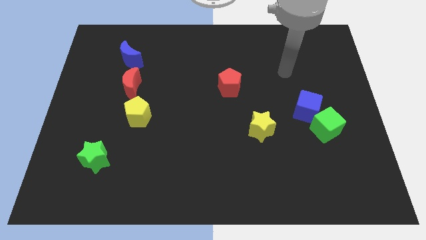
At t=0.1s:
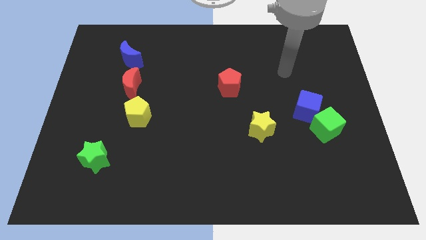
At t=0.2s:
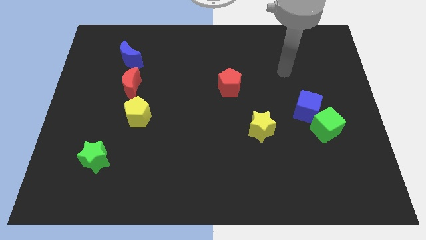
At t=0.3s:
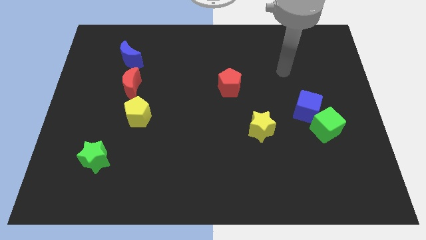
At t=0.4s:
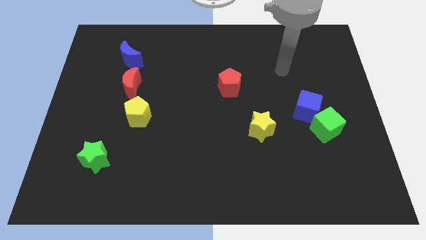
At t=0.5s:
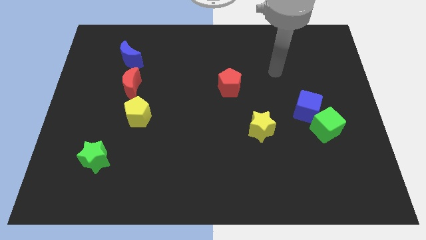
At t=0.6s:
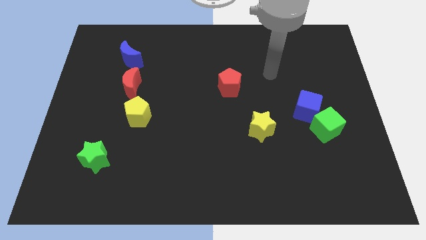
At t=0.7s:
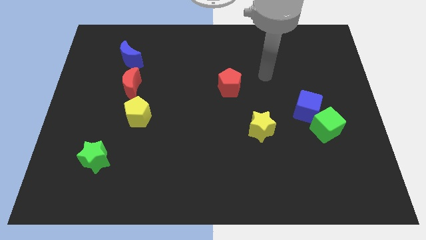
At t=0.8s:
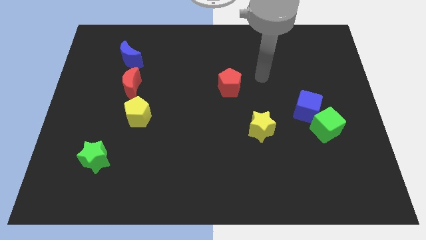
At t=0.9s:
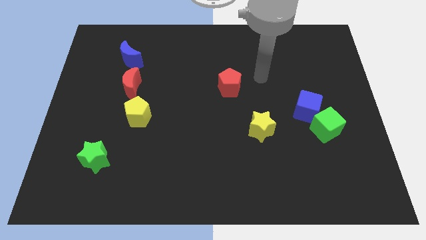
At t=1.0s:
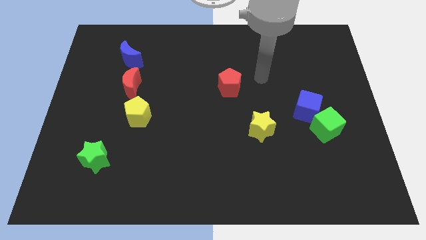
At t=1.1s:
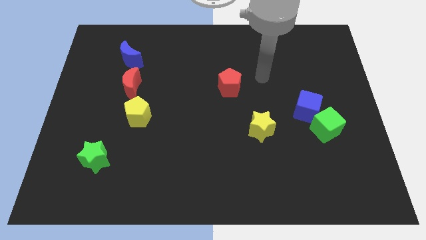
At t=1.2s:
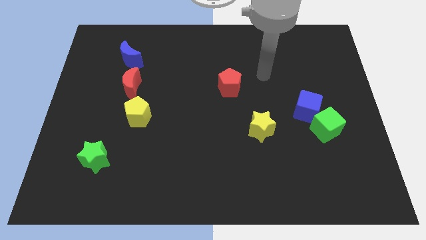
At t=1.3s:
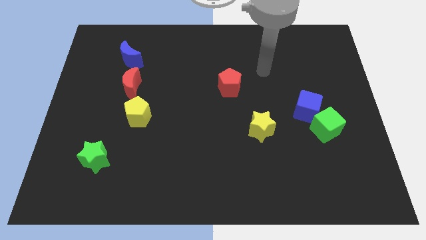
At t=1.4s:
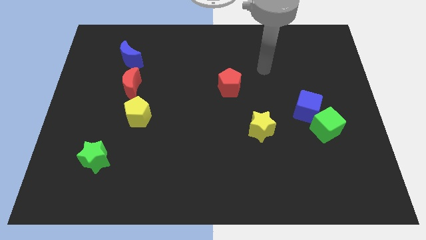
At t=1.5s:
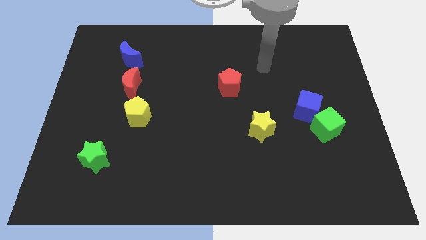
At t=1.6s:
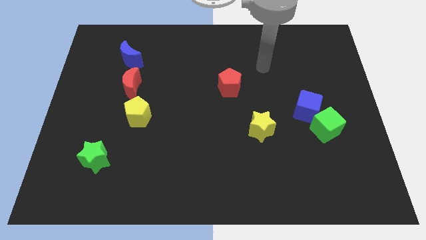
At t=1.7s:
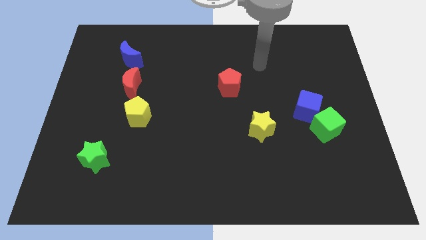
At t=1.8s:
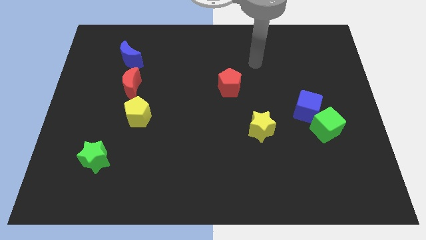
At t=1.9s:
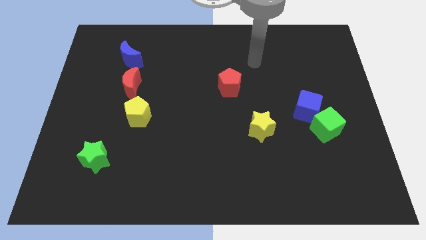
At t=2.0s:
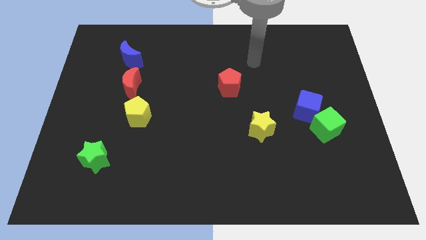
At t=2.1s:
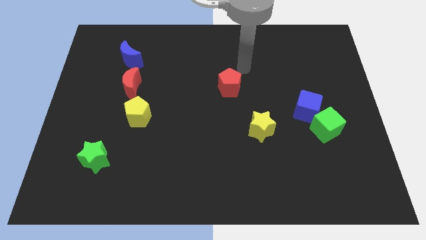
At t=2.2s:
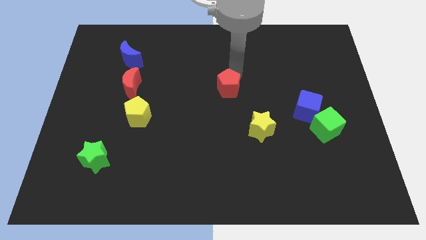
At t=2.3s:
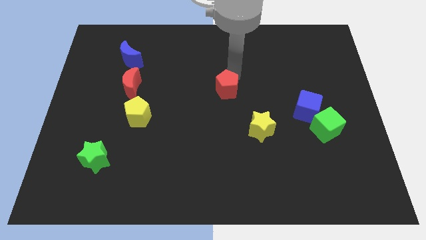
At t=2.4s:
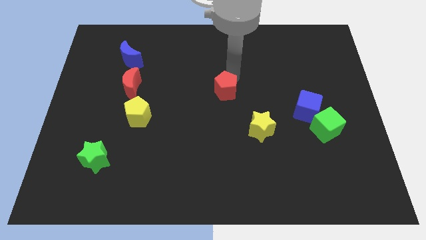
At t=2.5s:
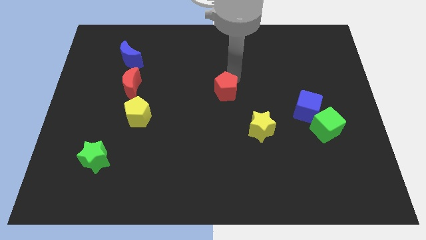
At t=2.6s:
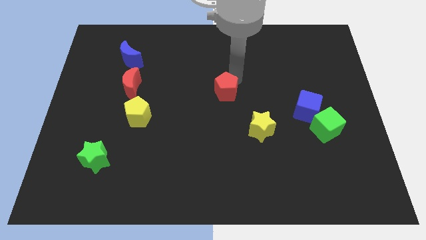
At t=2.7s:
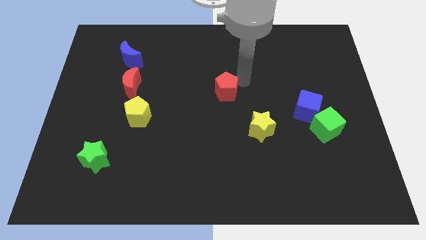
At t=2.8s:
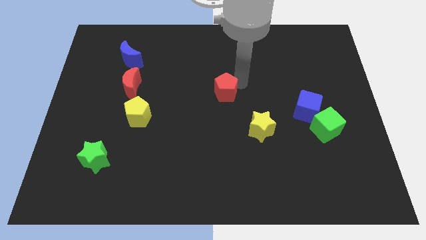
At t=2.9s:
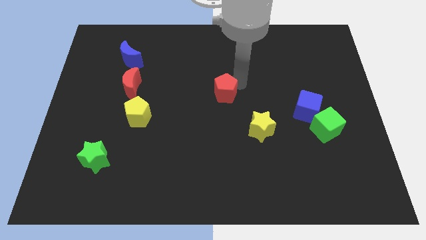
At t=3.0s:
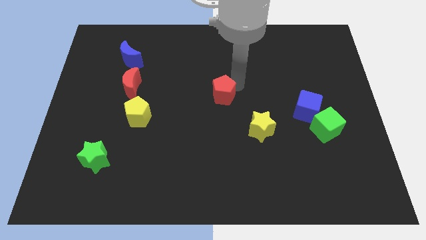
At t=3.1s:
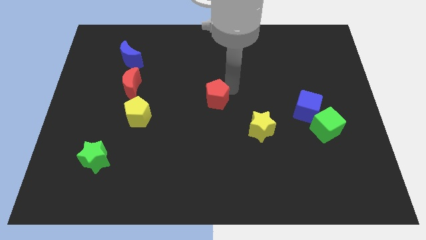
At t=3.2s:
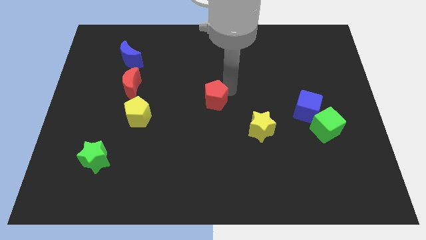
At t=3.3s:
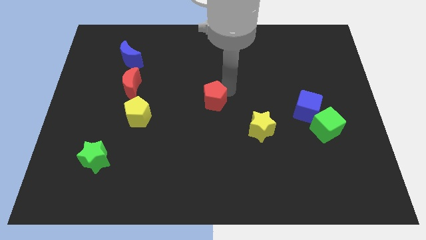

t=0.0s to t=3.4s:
push the red pentagon slightly

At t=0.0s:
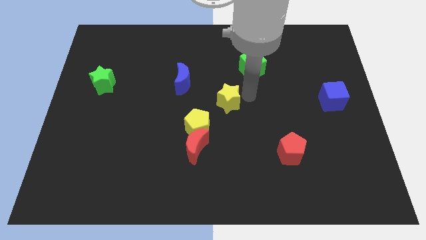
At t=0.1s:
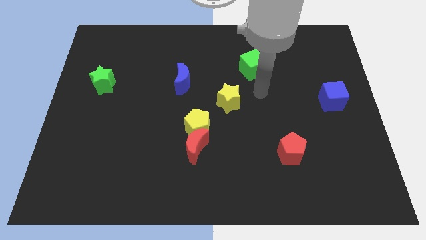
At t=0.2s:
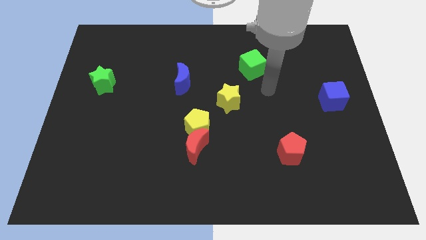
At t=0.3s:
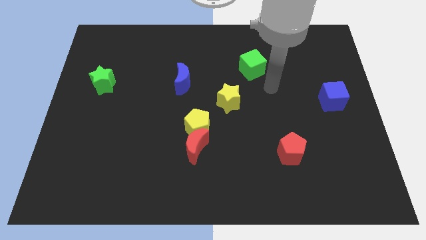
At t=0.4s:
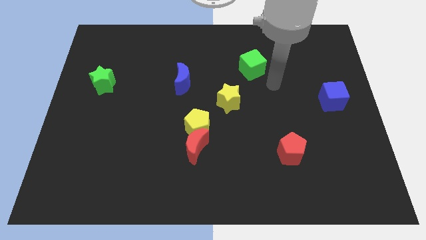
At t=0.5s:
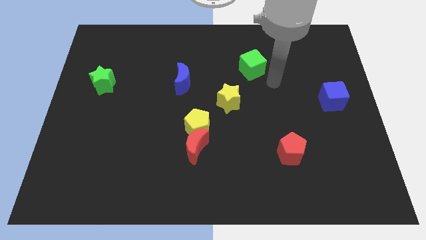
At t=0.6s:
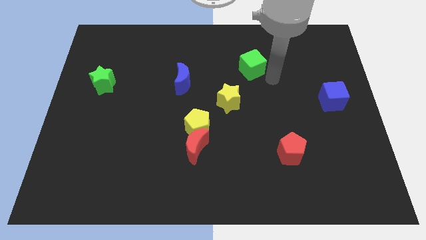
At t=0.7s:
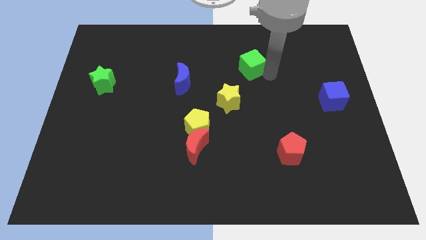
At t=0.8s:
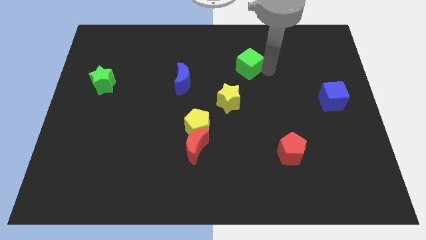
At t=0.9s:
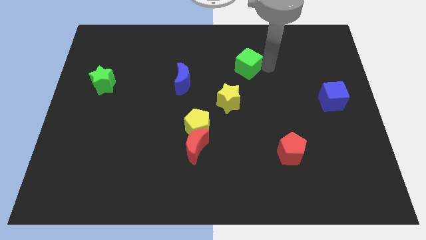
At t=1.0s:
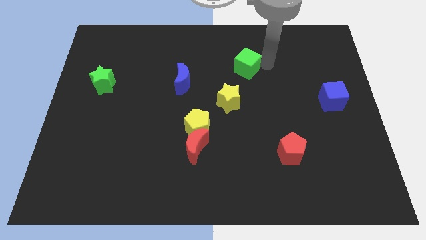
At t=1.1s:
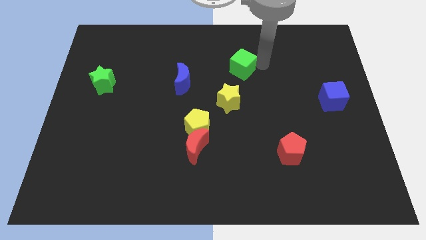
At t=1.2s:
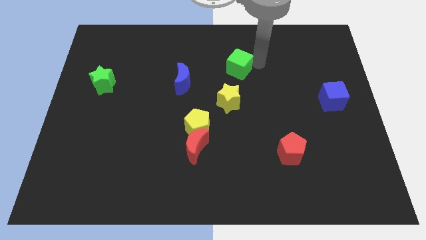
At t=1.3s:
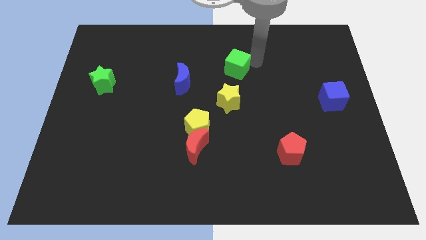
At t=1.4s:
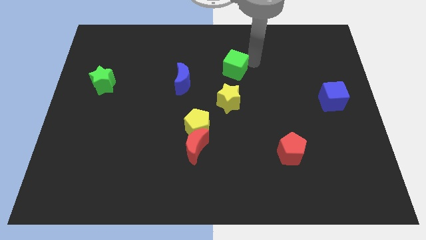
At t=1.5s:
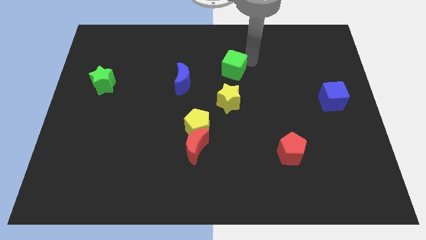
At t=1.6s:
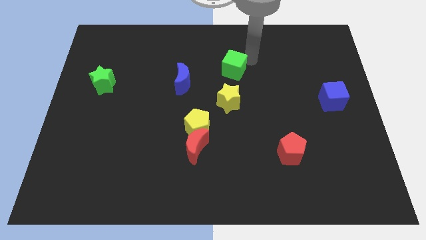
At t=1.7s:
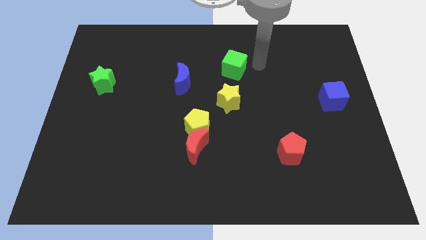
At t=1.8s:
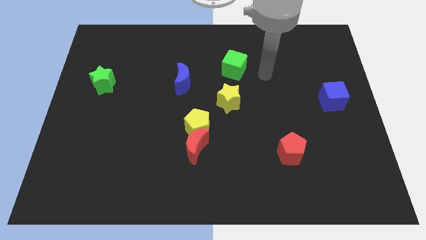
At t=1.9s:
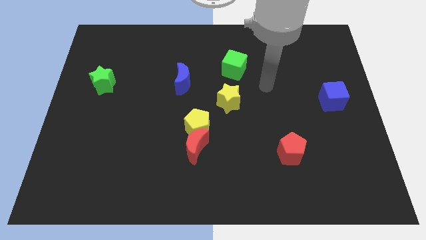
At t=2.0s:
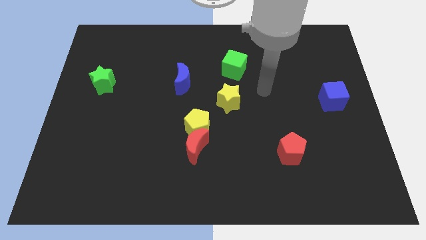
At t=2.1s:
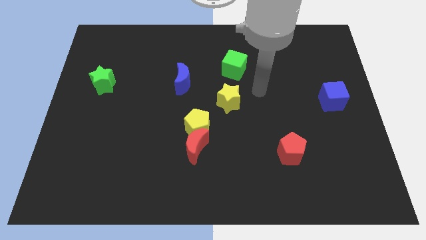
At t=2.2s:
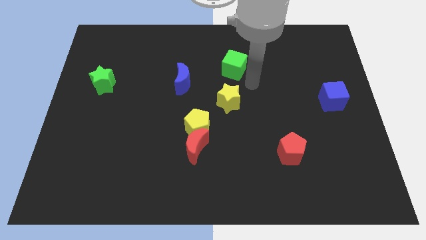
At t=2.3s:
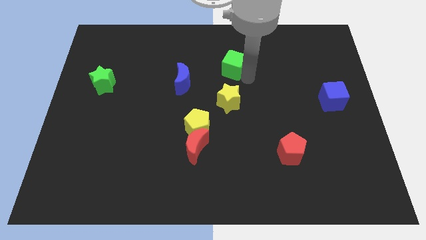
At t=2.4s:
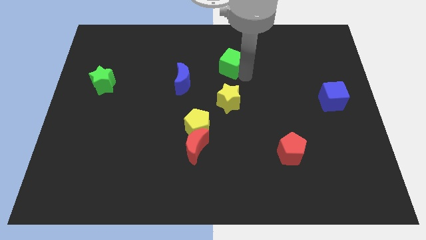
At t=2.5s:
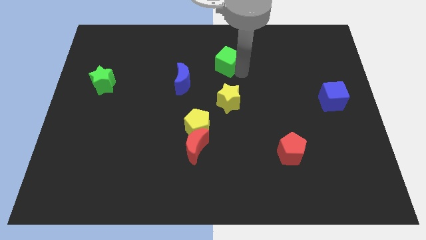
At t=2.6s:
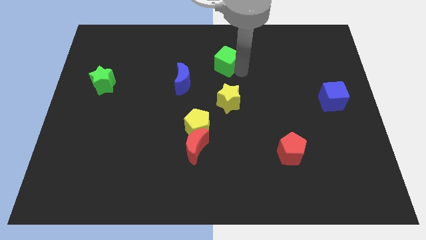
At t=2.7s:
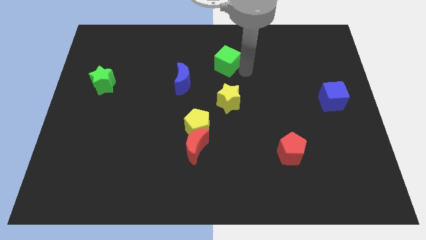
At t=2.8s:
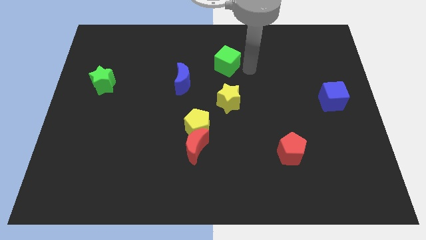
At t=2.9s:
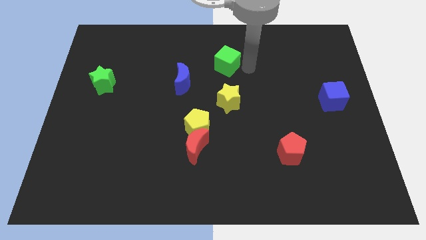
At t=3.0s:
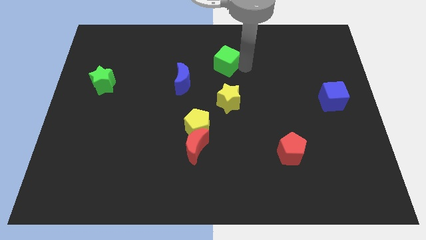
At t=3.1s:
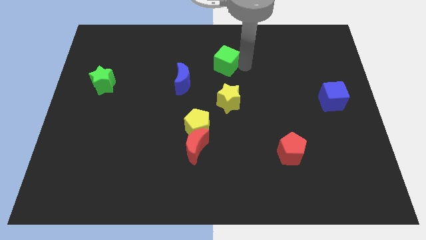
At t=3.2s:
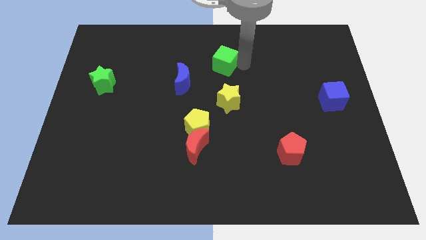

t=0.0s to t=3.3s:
place the green cube at the top of the yellow star

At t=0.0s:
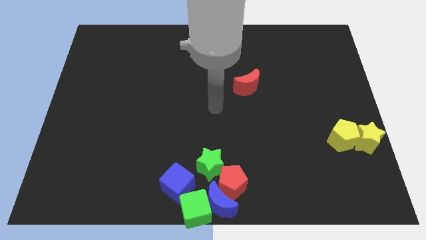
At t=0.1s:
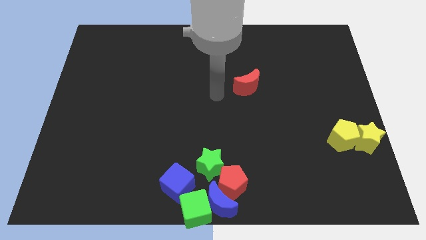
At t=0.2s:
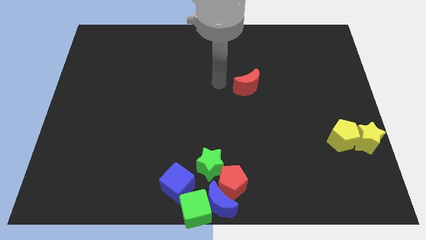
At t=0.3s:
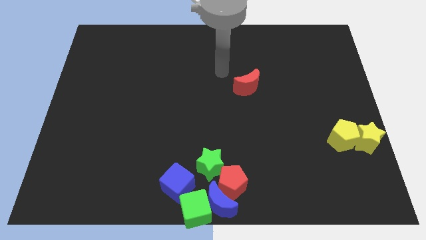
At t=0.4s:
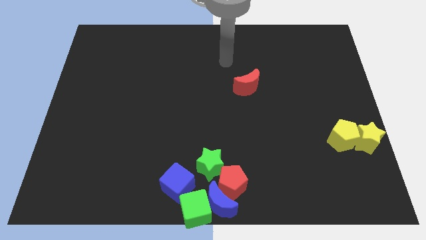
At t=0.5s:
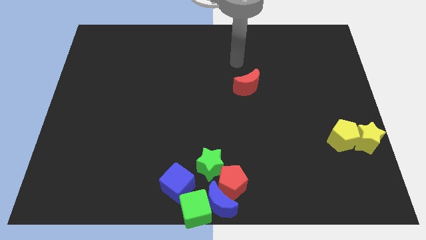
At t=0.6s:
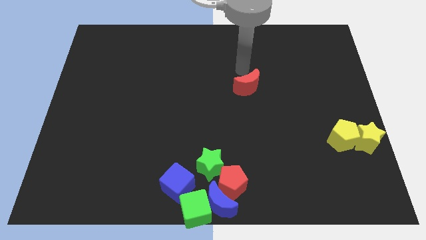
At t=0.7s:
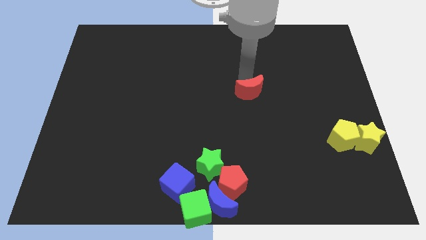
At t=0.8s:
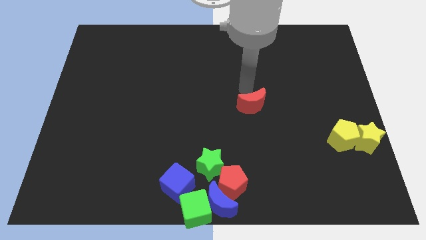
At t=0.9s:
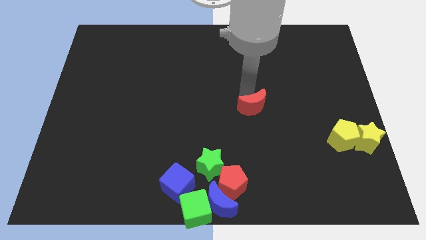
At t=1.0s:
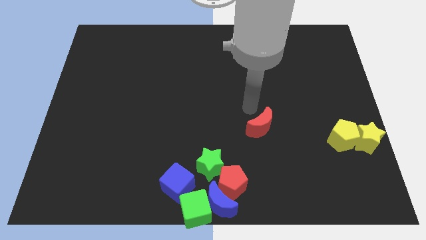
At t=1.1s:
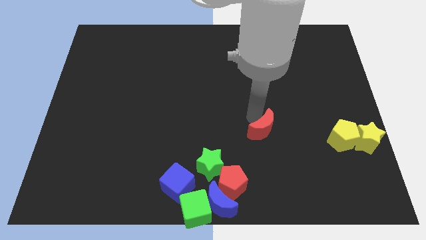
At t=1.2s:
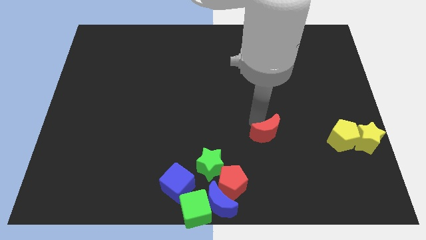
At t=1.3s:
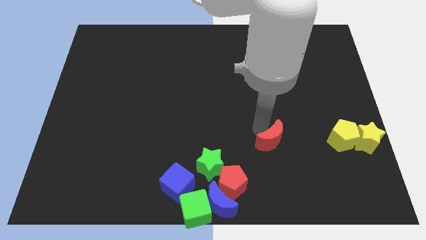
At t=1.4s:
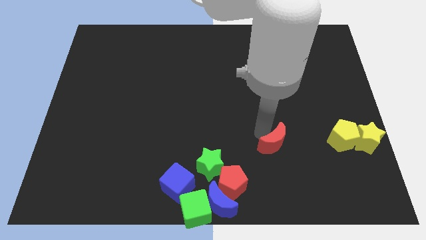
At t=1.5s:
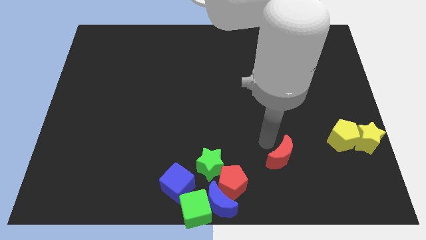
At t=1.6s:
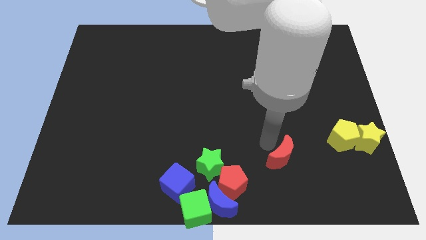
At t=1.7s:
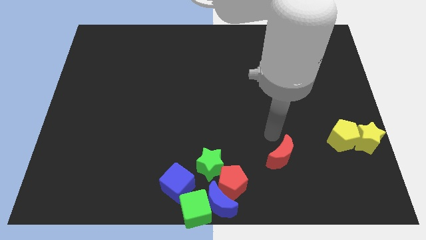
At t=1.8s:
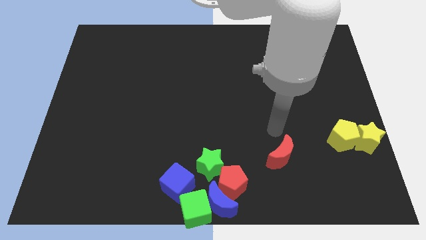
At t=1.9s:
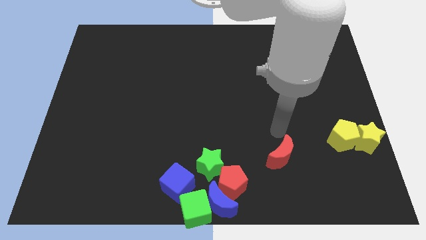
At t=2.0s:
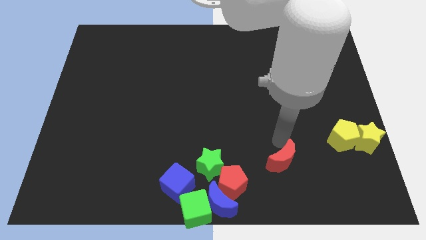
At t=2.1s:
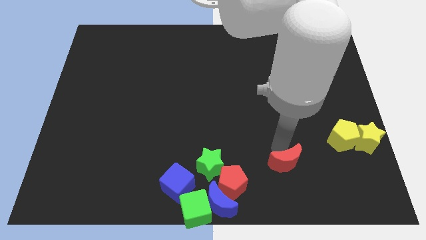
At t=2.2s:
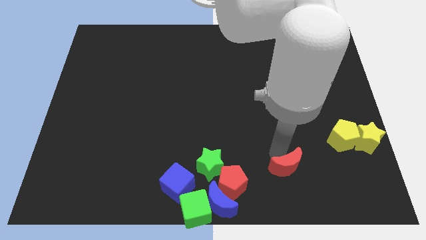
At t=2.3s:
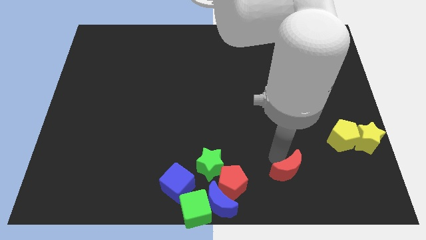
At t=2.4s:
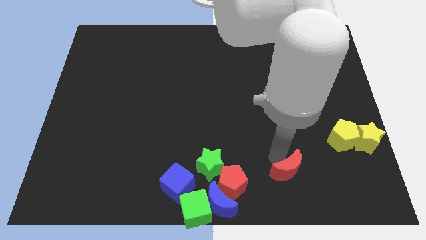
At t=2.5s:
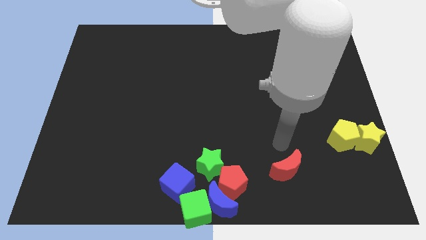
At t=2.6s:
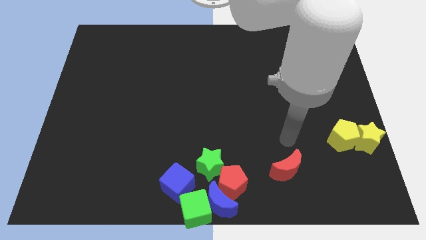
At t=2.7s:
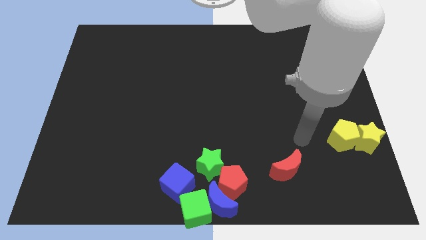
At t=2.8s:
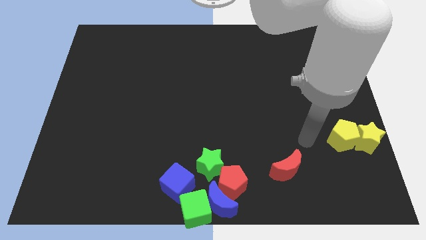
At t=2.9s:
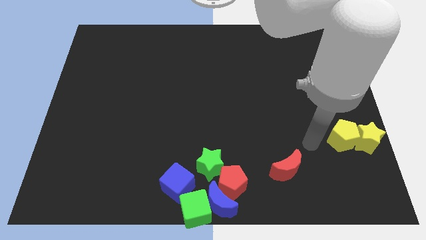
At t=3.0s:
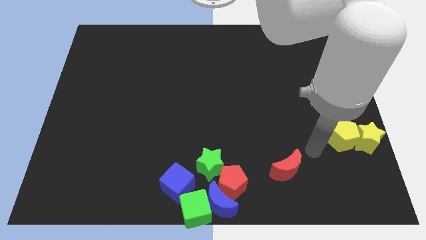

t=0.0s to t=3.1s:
move red moon downwards
